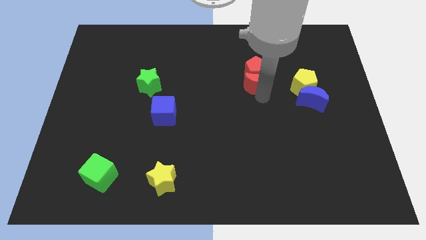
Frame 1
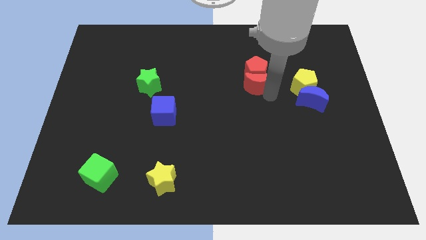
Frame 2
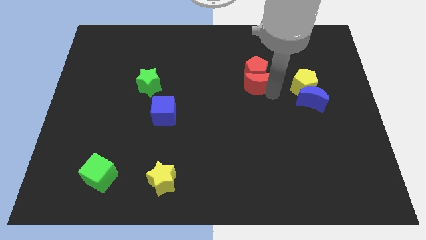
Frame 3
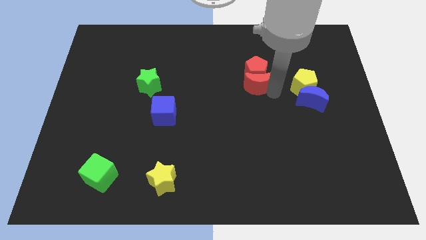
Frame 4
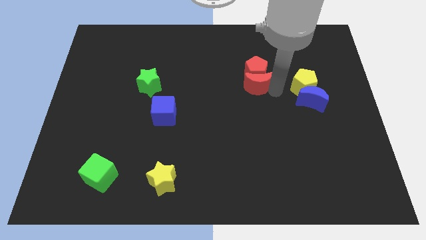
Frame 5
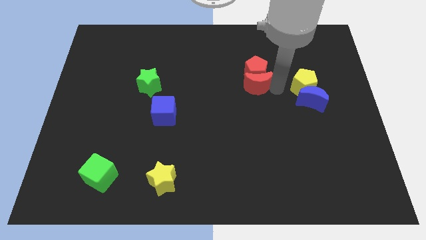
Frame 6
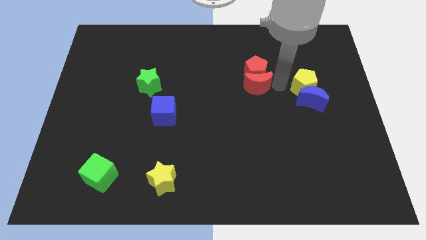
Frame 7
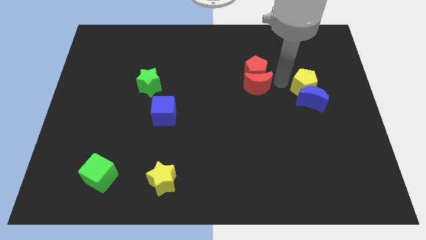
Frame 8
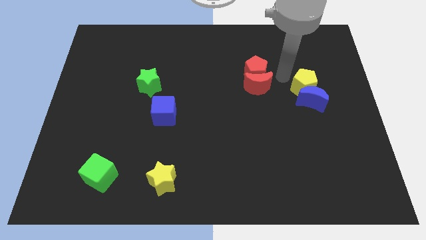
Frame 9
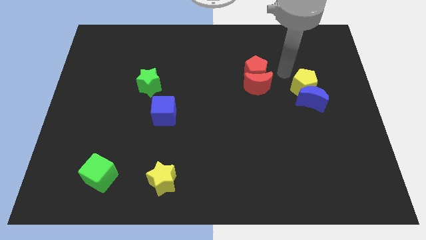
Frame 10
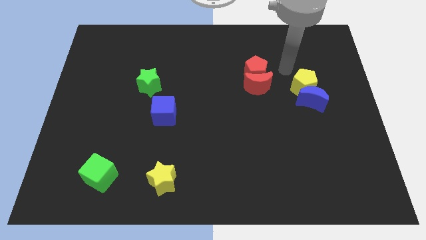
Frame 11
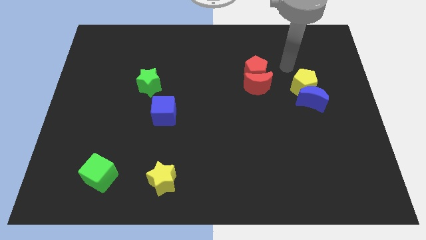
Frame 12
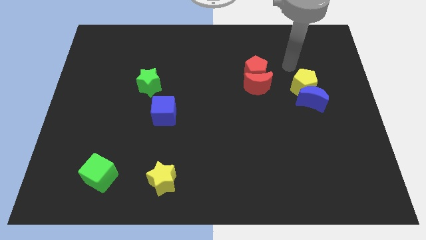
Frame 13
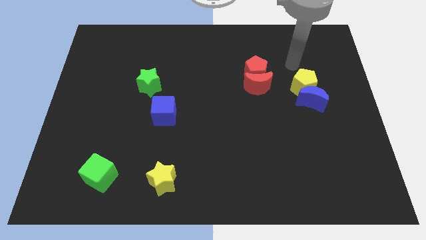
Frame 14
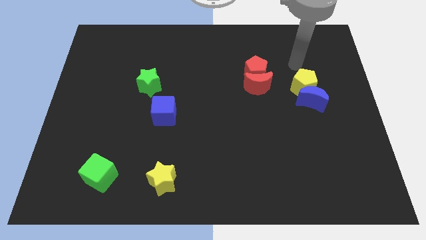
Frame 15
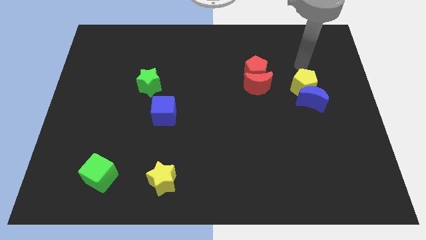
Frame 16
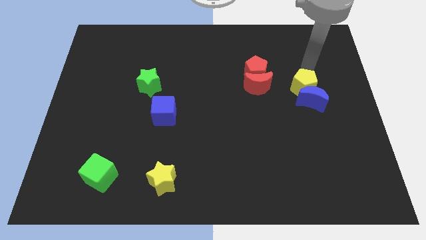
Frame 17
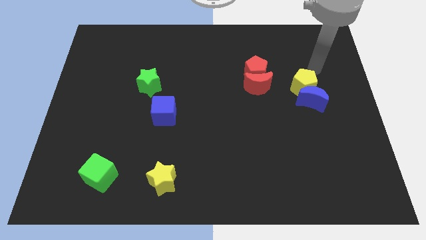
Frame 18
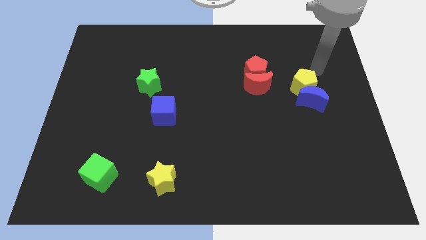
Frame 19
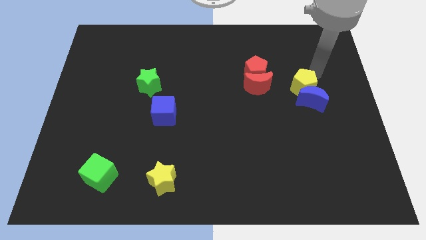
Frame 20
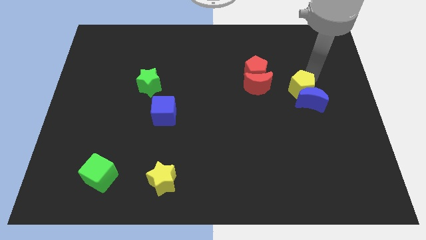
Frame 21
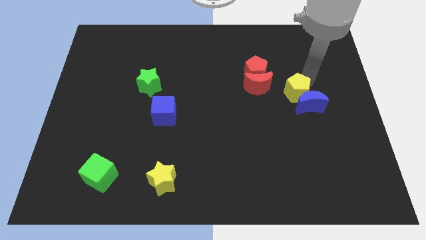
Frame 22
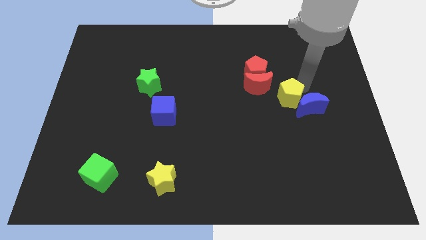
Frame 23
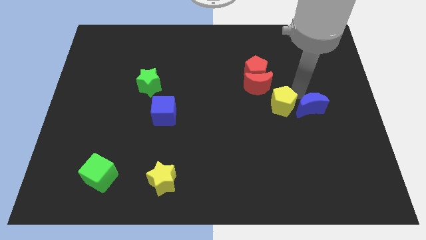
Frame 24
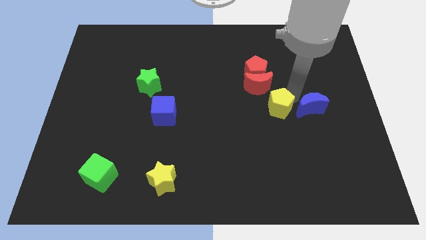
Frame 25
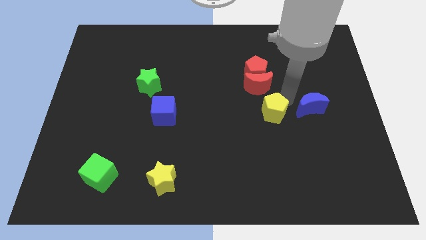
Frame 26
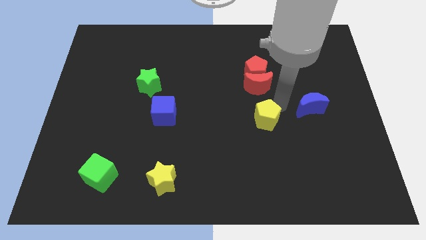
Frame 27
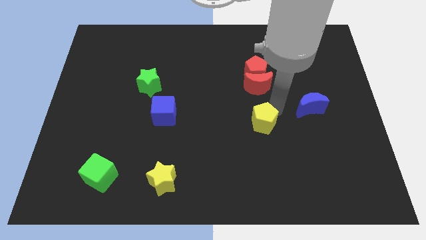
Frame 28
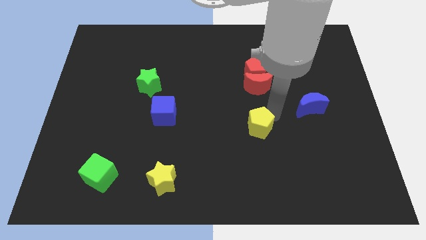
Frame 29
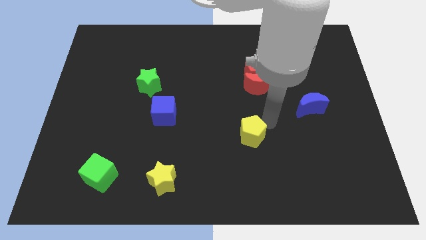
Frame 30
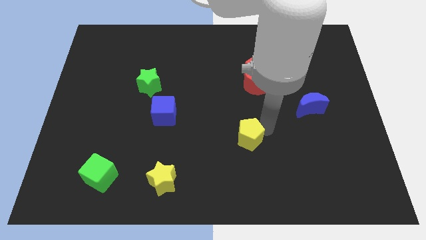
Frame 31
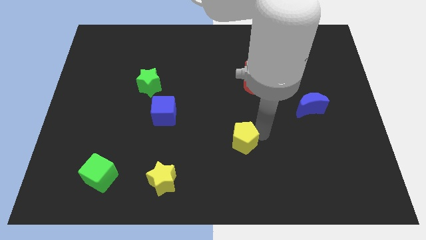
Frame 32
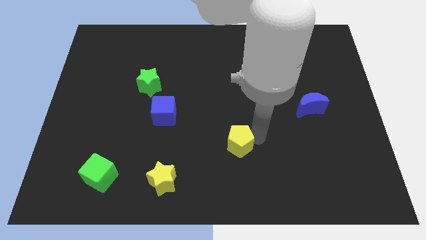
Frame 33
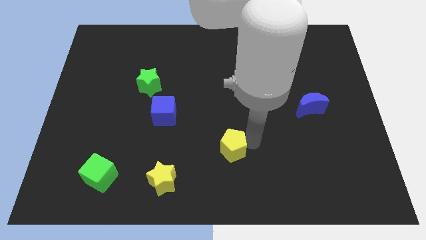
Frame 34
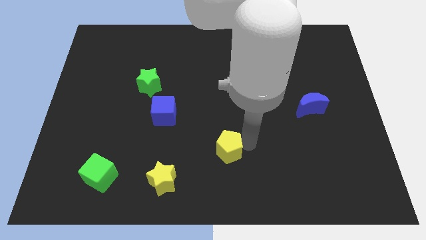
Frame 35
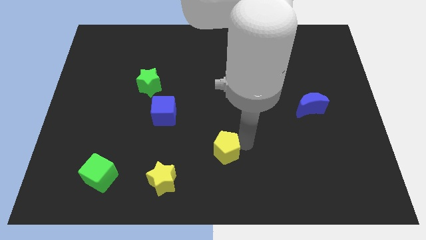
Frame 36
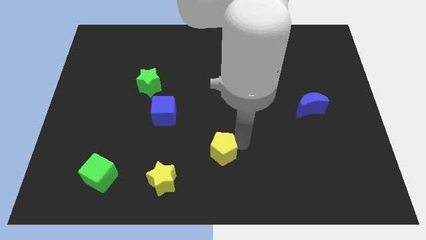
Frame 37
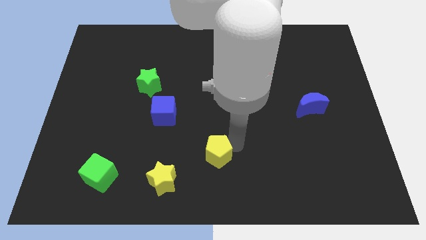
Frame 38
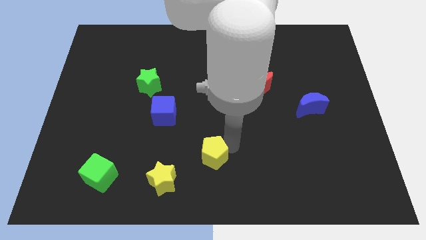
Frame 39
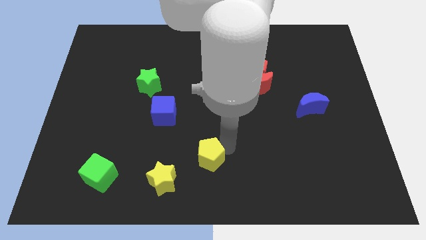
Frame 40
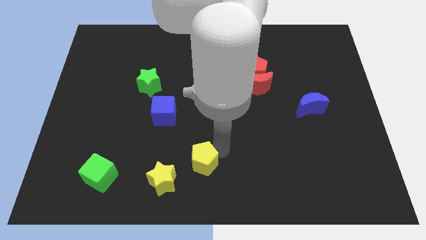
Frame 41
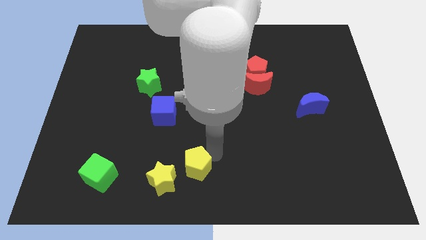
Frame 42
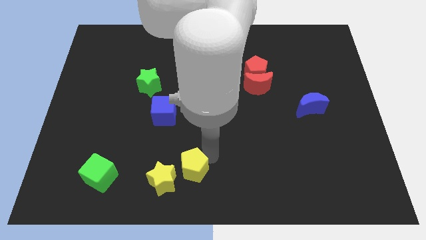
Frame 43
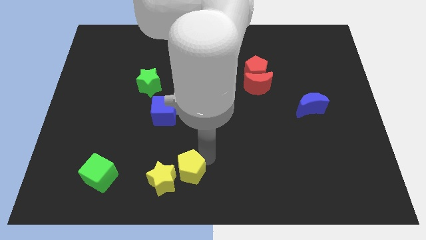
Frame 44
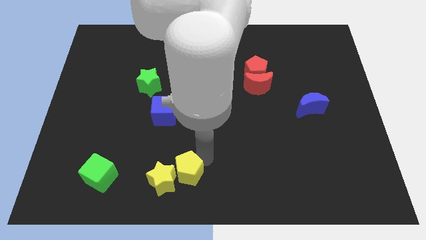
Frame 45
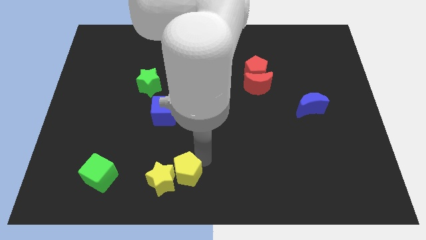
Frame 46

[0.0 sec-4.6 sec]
move the yellow pentagon right to the yellow star

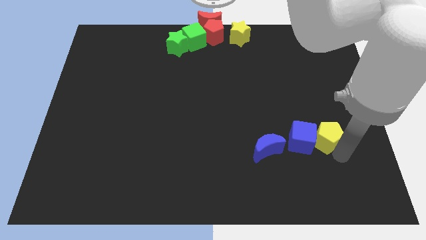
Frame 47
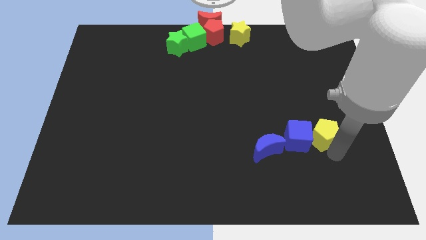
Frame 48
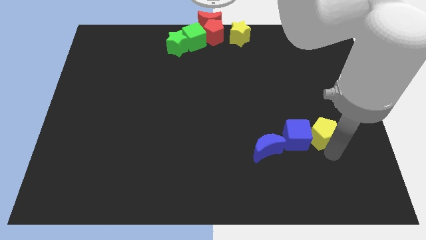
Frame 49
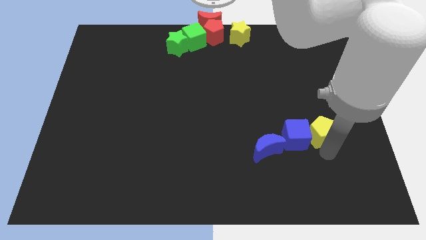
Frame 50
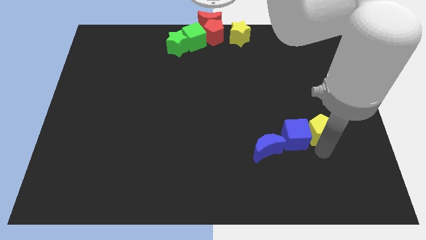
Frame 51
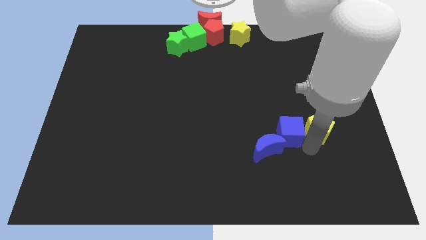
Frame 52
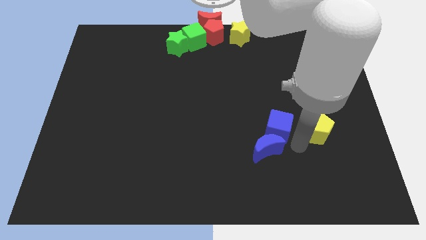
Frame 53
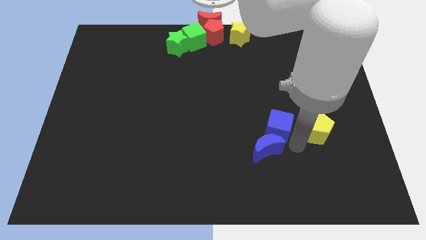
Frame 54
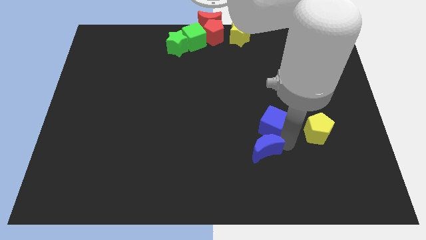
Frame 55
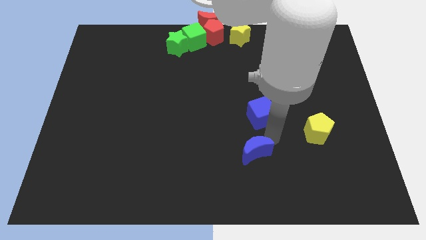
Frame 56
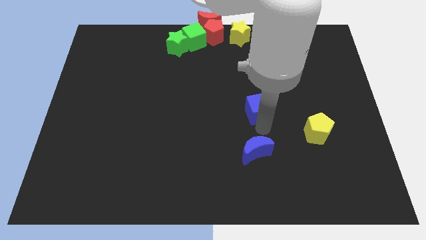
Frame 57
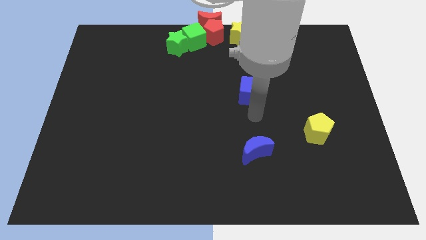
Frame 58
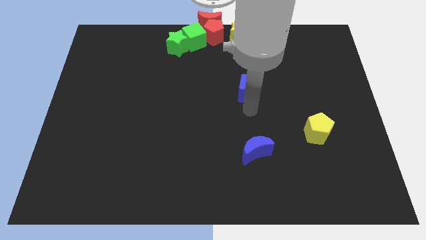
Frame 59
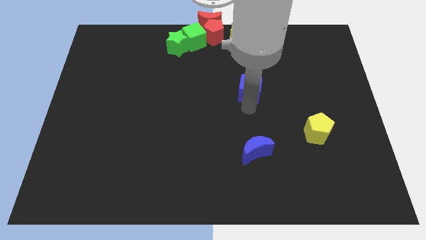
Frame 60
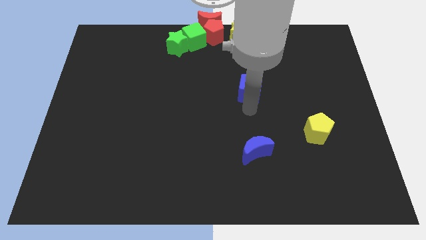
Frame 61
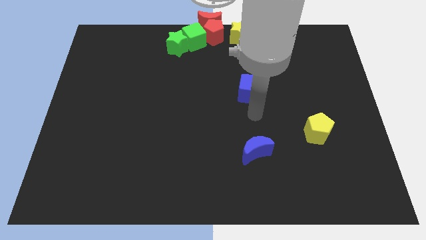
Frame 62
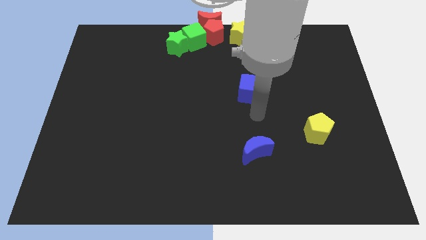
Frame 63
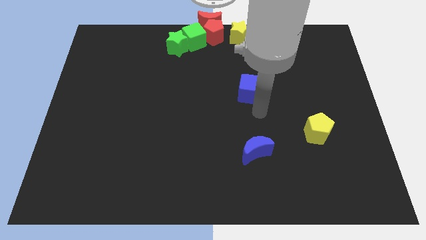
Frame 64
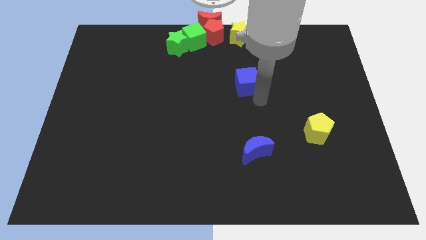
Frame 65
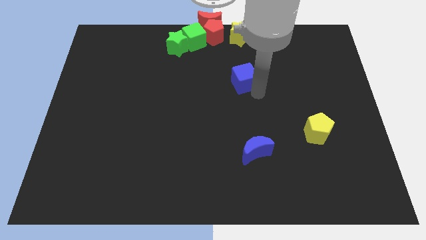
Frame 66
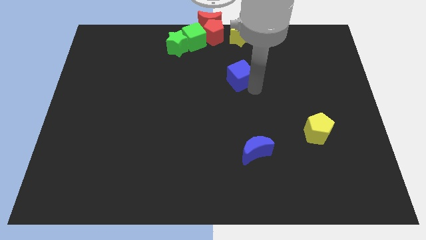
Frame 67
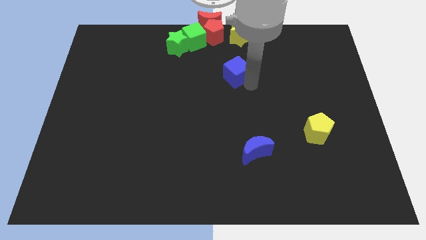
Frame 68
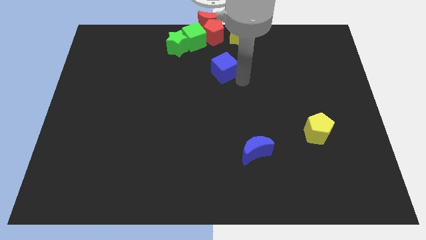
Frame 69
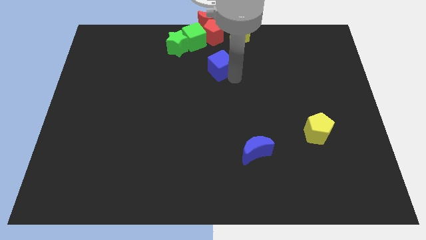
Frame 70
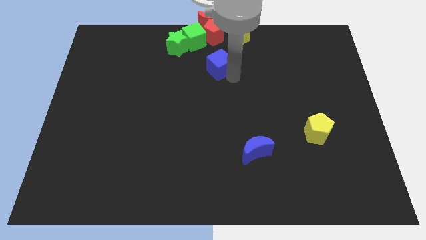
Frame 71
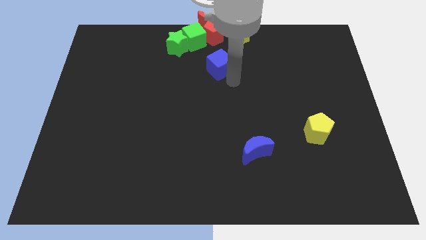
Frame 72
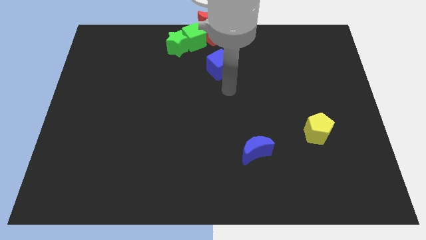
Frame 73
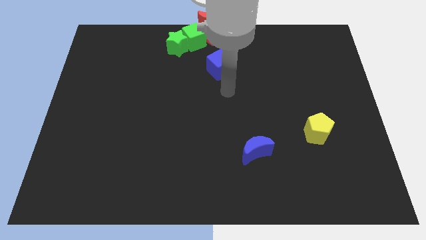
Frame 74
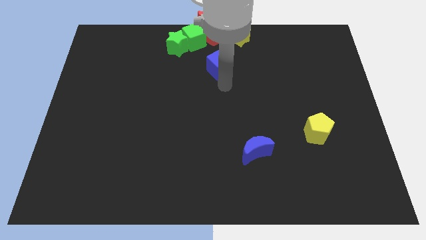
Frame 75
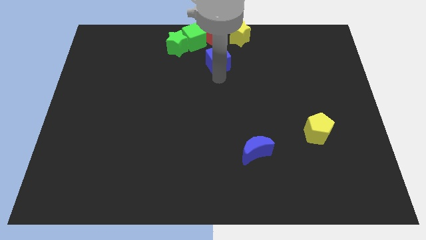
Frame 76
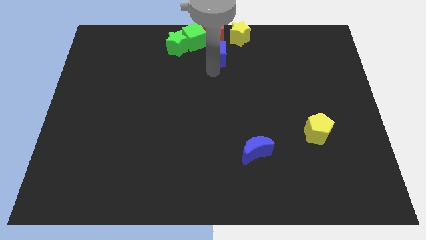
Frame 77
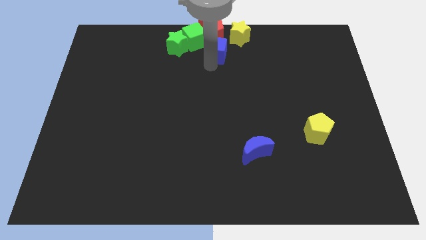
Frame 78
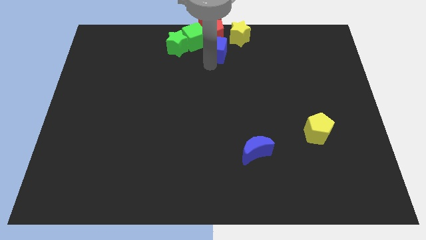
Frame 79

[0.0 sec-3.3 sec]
push the blue cube towards the bottom side of the red pentagon

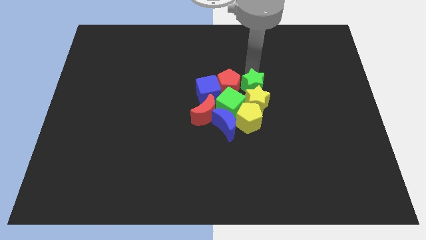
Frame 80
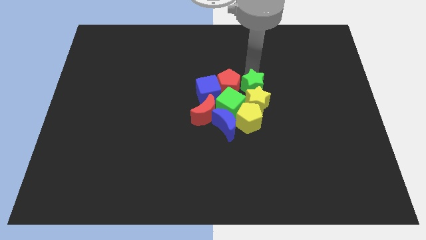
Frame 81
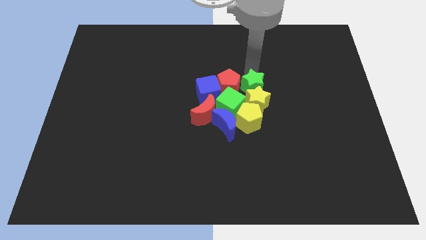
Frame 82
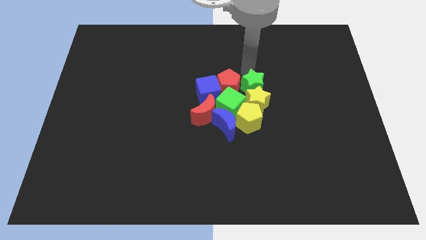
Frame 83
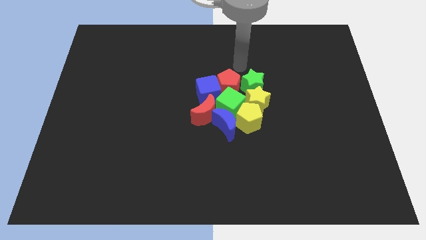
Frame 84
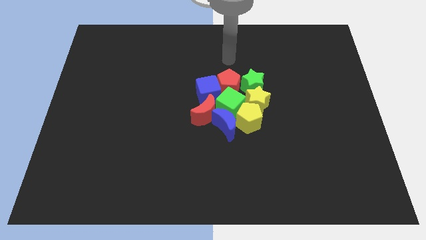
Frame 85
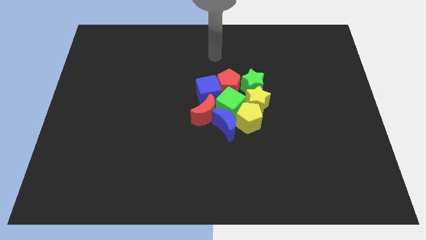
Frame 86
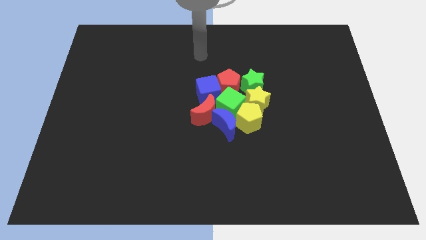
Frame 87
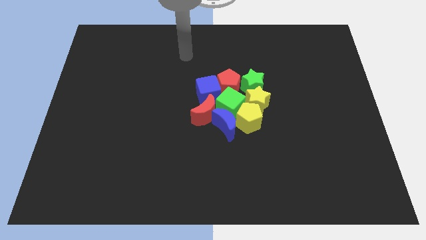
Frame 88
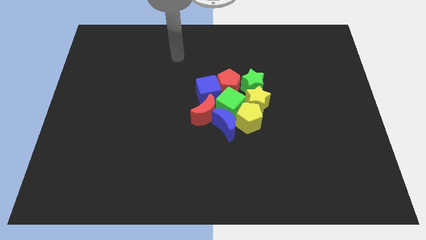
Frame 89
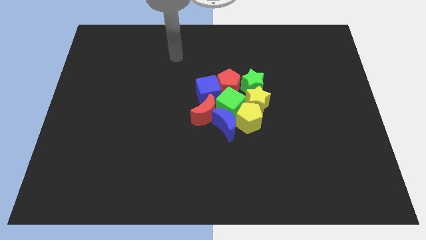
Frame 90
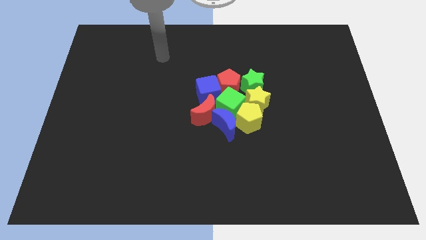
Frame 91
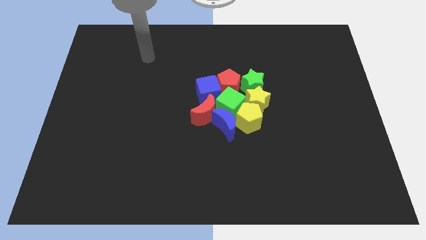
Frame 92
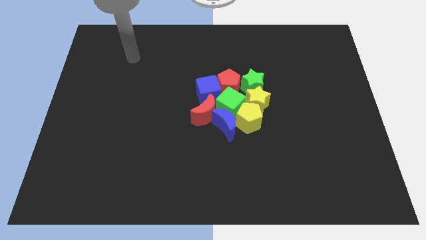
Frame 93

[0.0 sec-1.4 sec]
move arm towards the top left corner of the board
